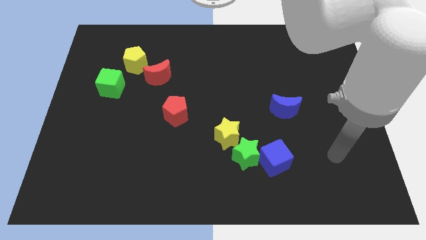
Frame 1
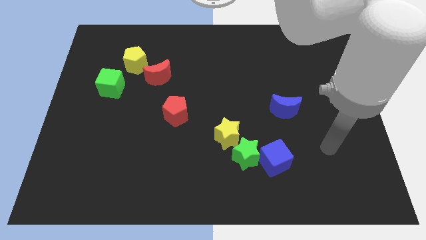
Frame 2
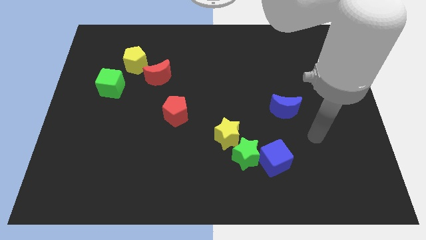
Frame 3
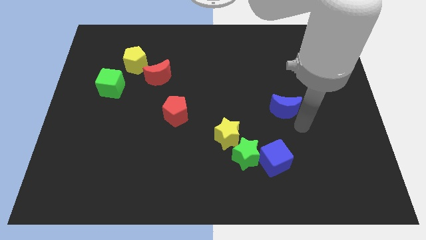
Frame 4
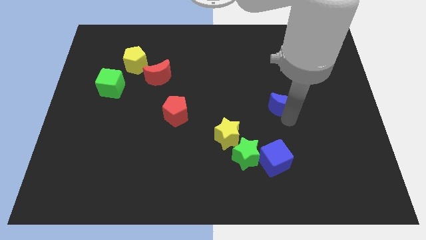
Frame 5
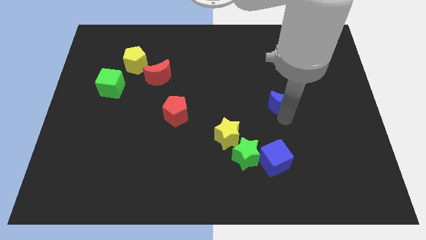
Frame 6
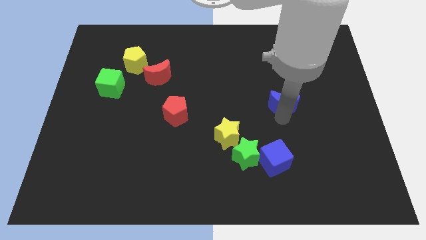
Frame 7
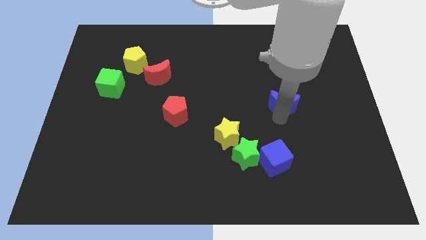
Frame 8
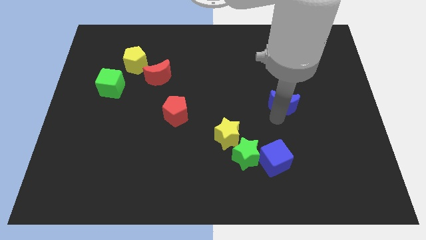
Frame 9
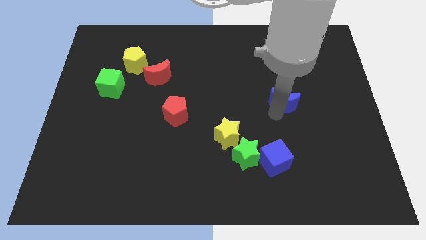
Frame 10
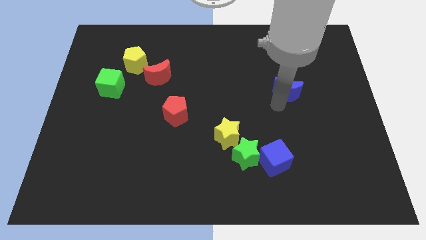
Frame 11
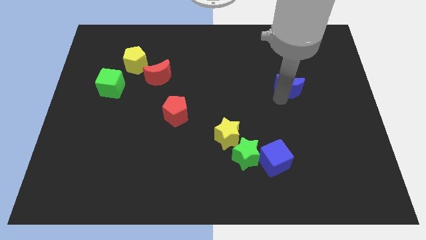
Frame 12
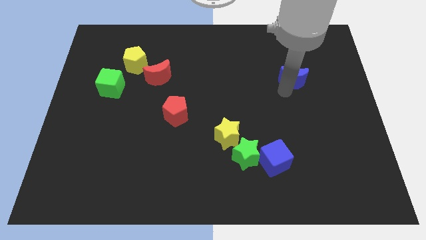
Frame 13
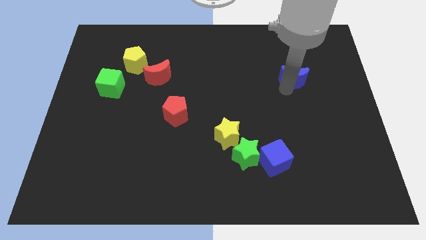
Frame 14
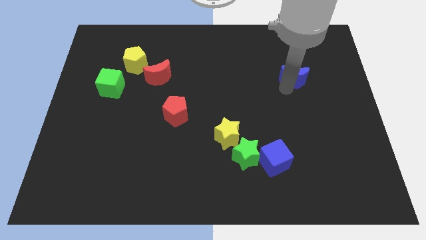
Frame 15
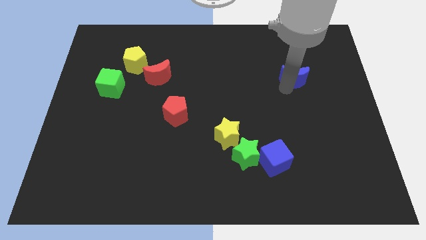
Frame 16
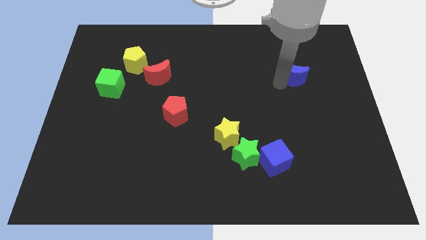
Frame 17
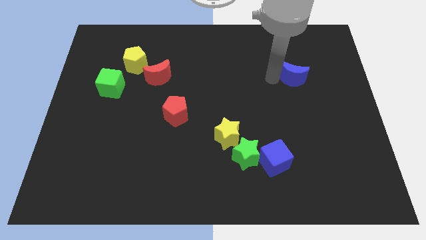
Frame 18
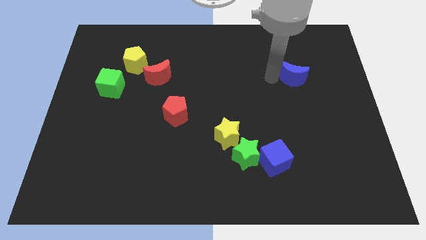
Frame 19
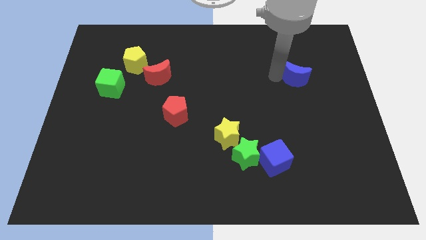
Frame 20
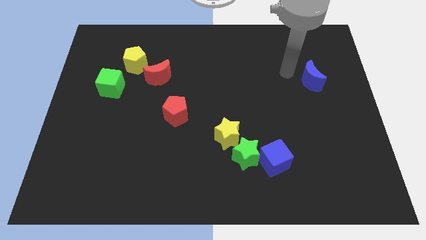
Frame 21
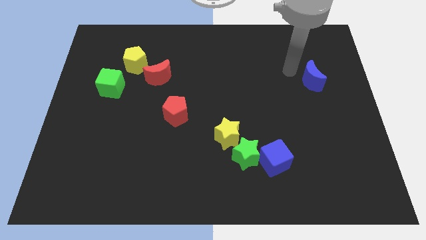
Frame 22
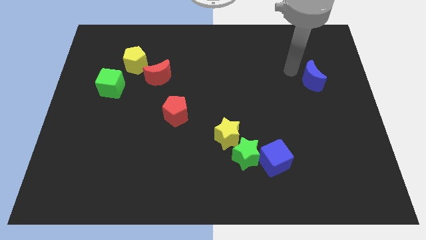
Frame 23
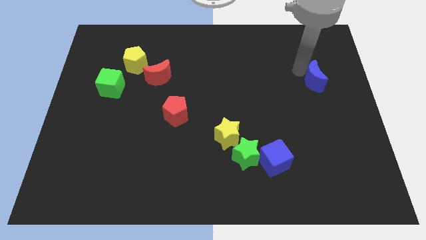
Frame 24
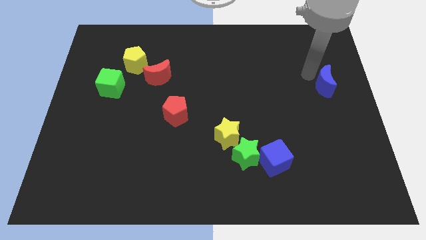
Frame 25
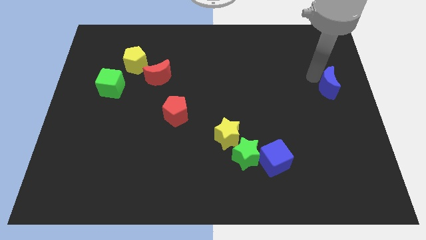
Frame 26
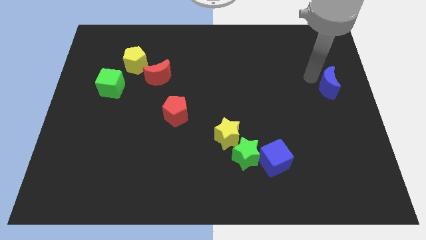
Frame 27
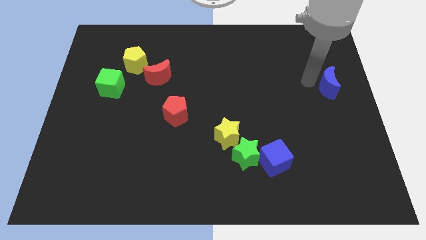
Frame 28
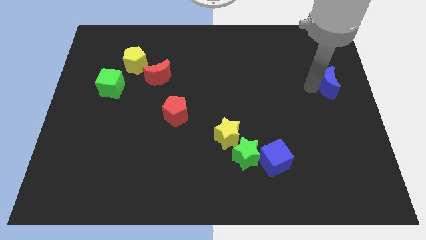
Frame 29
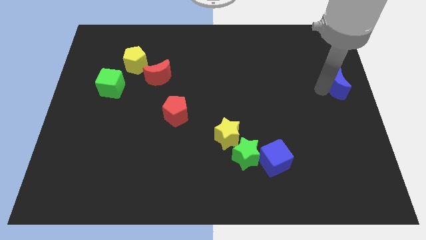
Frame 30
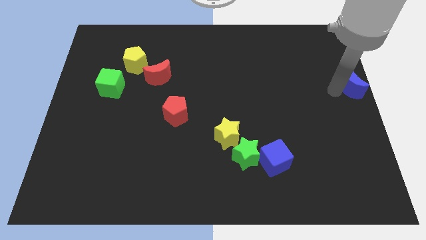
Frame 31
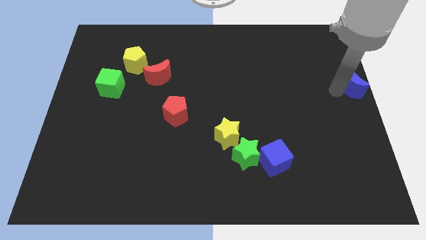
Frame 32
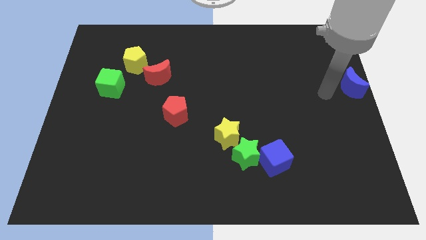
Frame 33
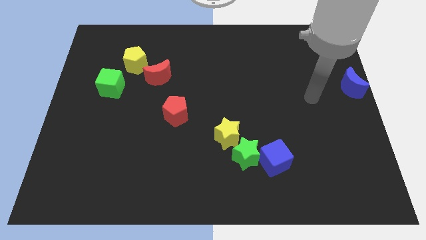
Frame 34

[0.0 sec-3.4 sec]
place the blue moon to the center side of the board

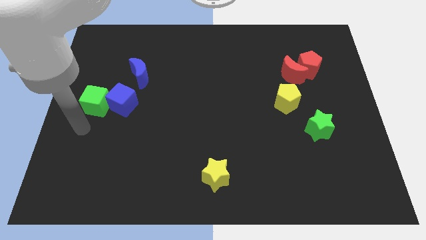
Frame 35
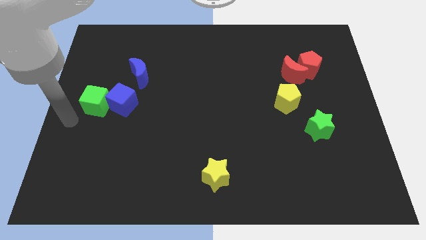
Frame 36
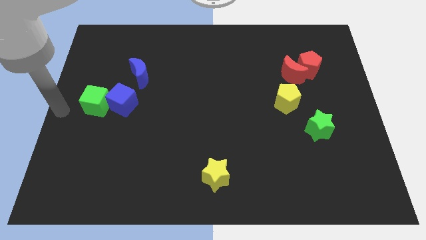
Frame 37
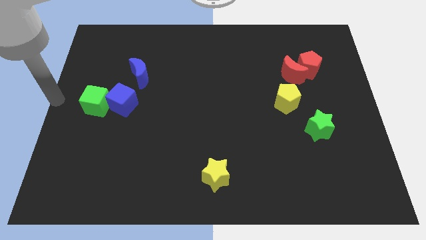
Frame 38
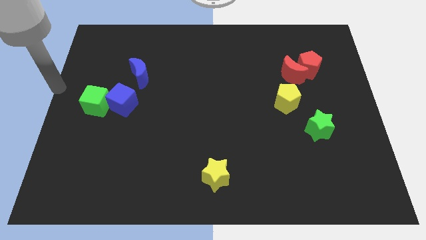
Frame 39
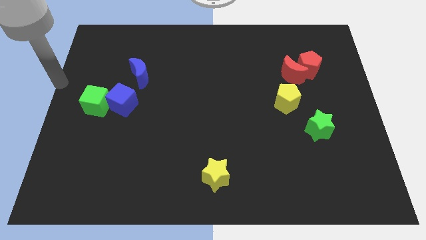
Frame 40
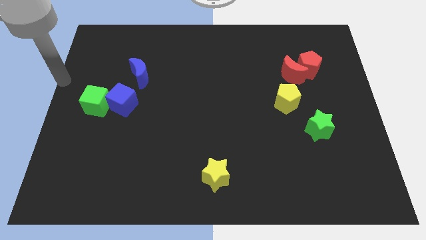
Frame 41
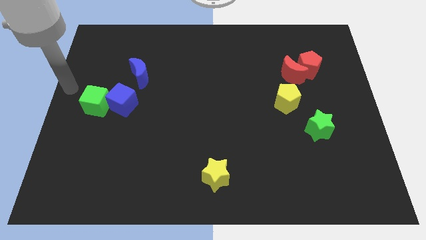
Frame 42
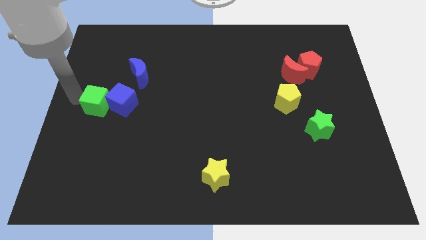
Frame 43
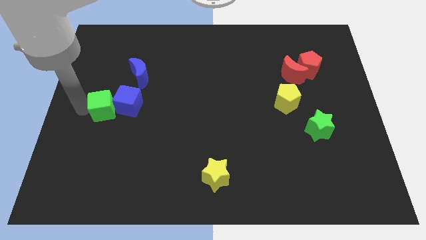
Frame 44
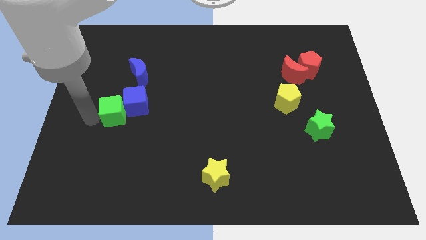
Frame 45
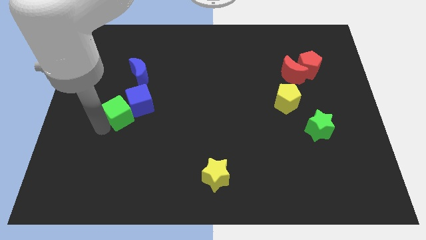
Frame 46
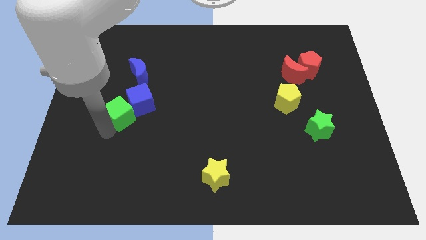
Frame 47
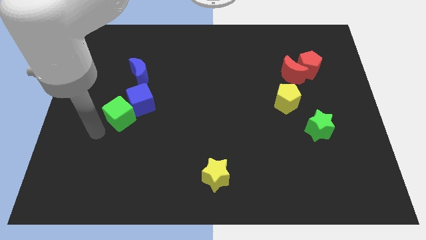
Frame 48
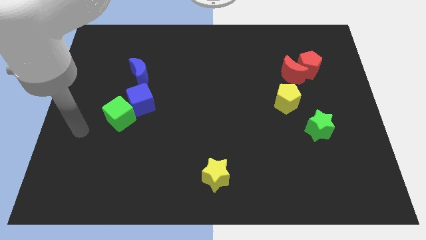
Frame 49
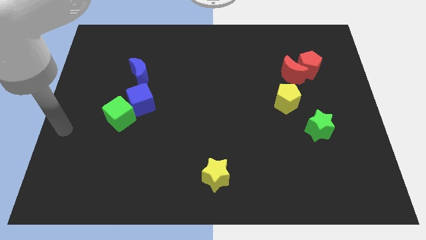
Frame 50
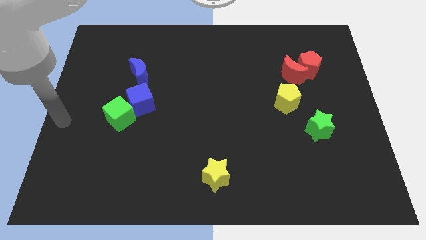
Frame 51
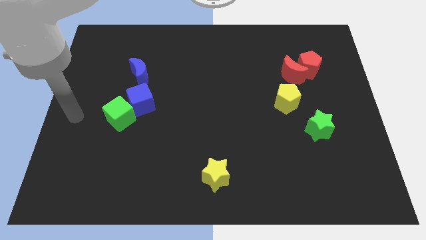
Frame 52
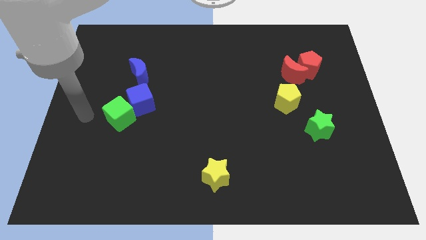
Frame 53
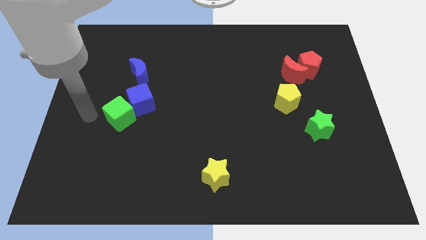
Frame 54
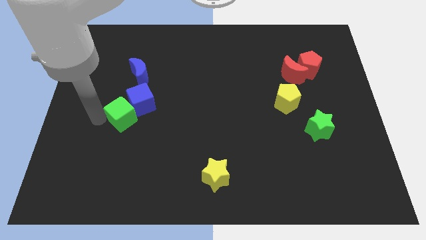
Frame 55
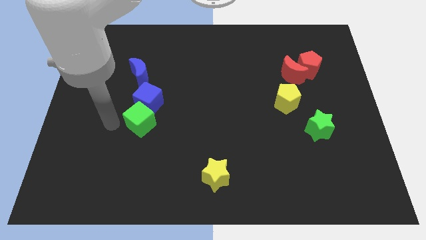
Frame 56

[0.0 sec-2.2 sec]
slightly push the green cube towards the right

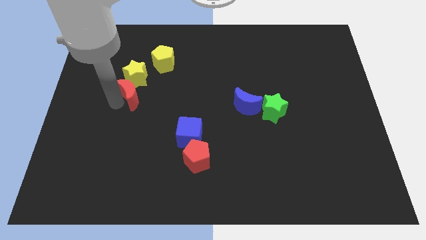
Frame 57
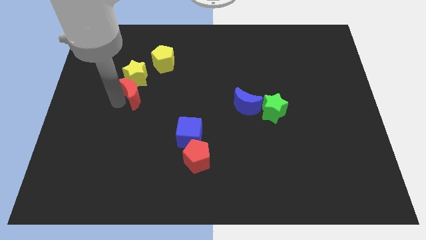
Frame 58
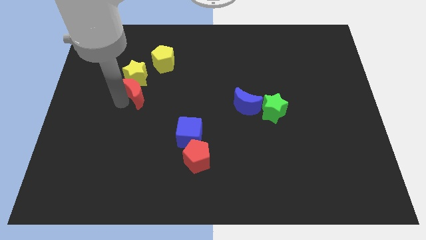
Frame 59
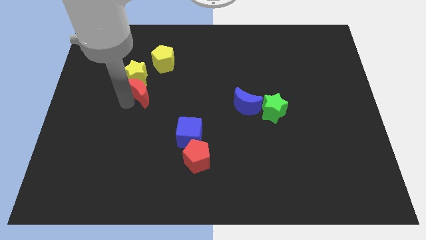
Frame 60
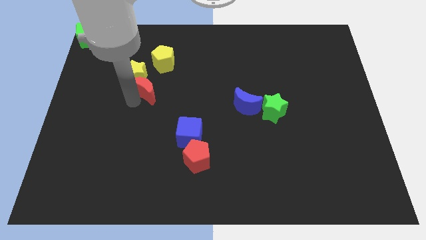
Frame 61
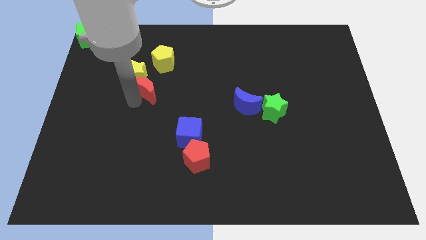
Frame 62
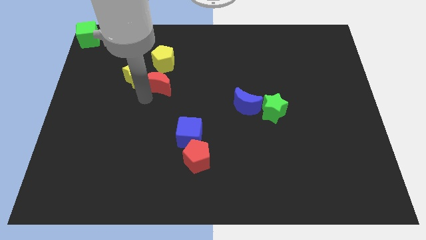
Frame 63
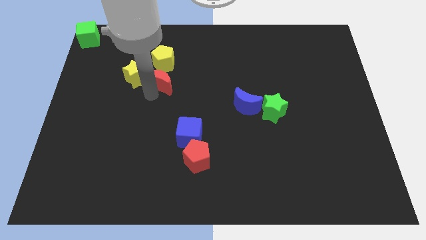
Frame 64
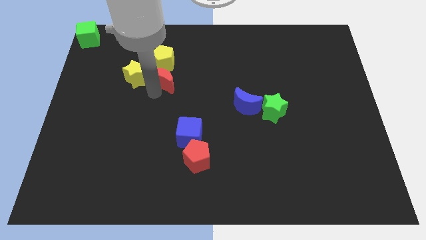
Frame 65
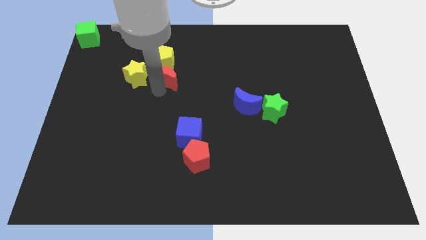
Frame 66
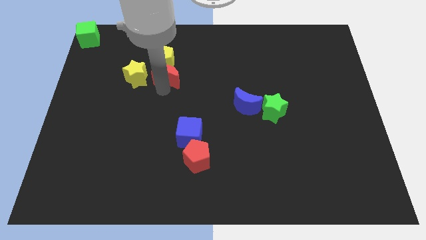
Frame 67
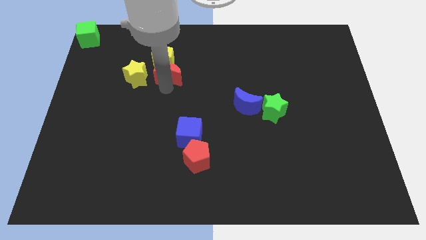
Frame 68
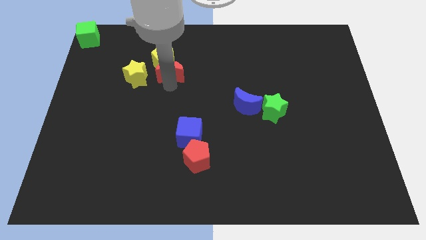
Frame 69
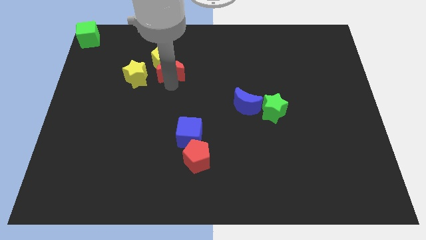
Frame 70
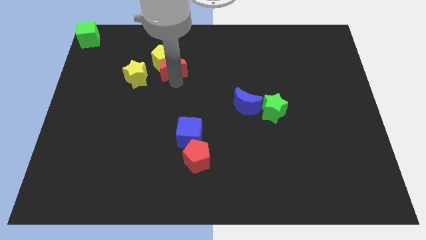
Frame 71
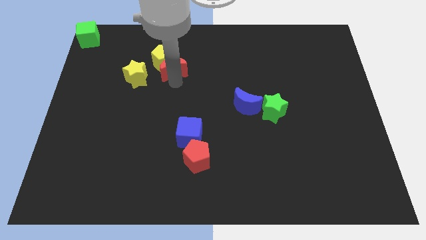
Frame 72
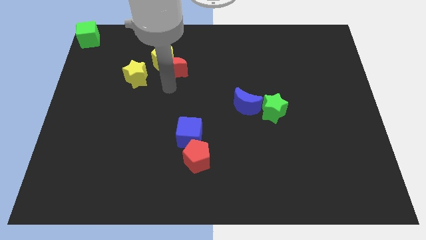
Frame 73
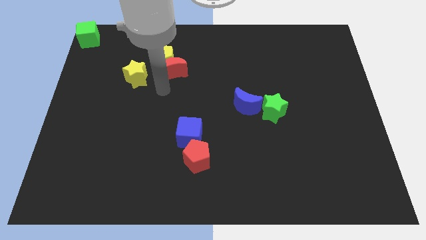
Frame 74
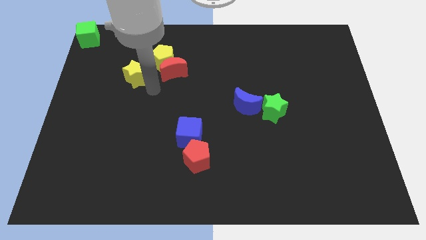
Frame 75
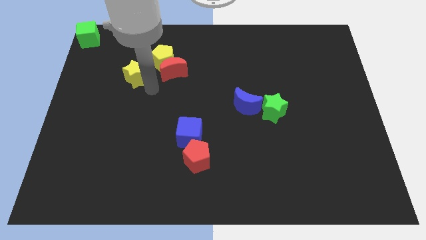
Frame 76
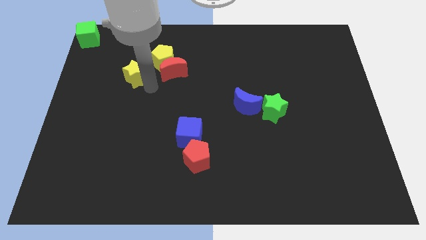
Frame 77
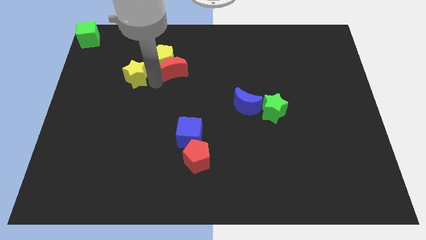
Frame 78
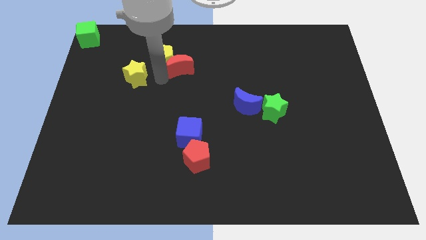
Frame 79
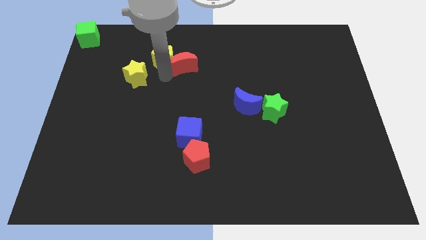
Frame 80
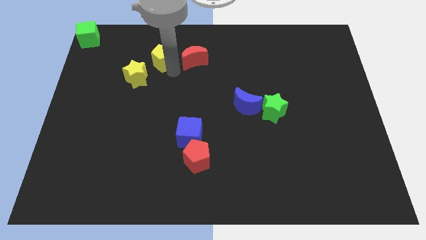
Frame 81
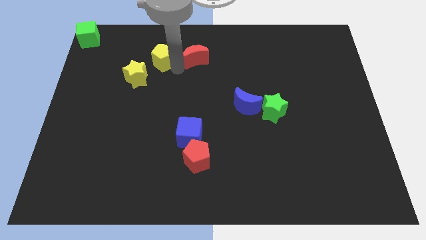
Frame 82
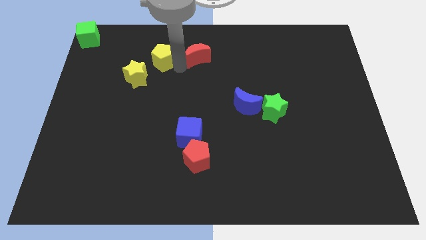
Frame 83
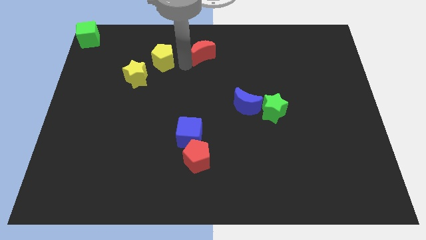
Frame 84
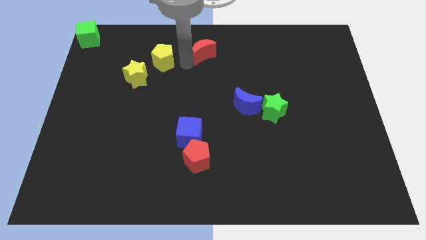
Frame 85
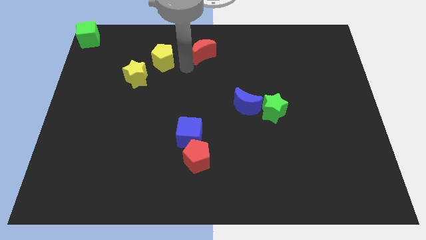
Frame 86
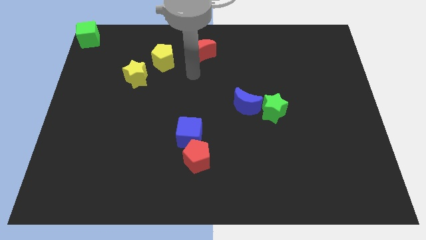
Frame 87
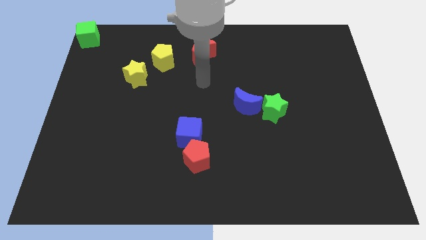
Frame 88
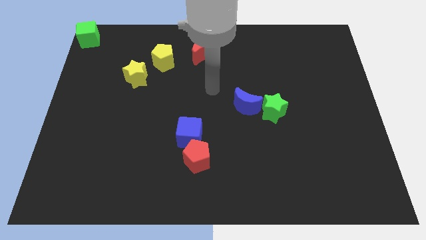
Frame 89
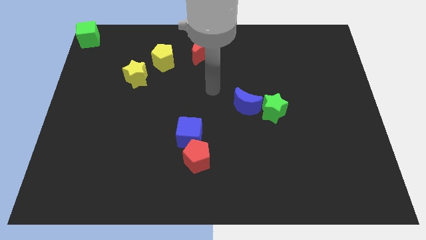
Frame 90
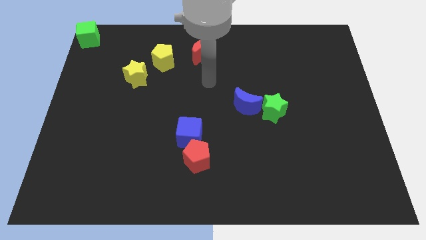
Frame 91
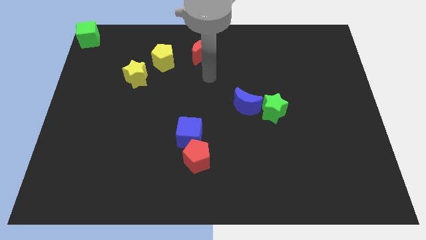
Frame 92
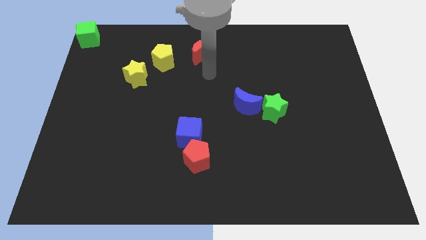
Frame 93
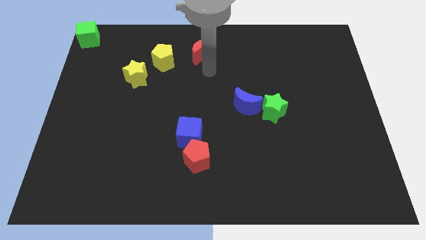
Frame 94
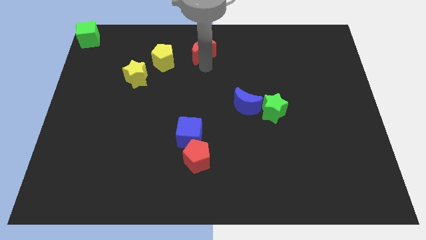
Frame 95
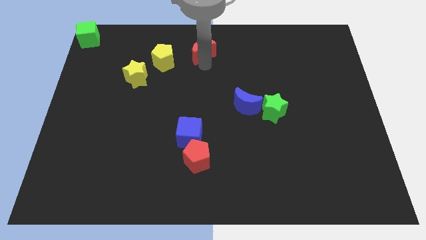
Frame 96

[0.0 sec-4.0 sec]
place the red moon to the right of the yellow pentagon
